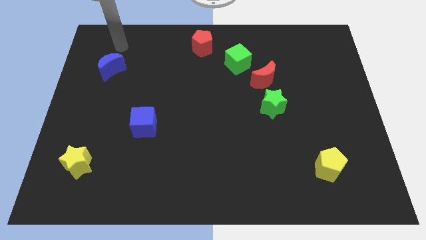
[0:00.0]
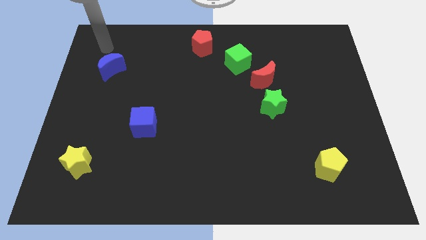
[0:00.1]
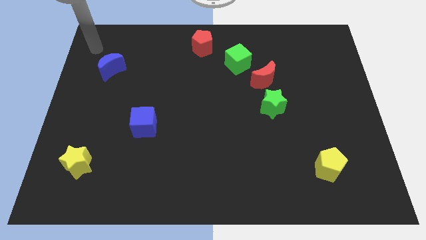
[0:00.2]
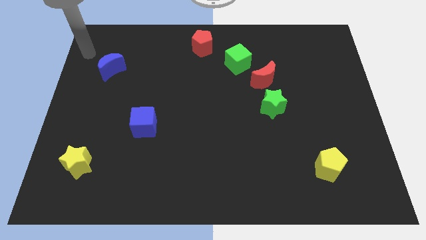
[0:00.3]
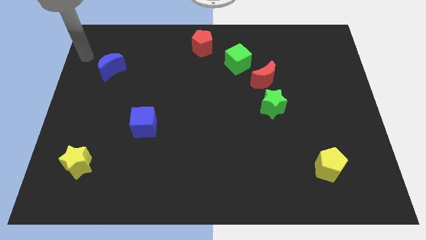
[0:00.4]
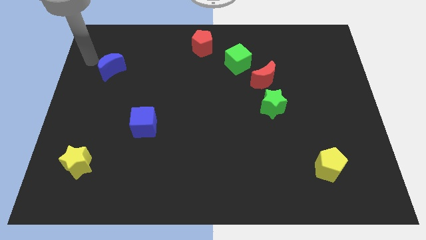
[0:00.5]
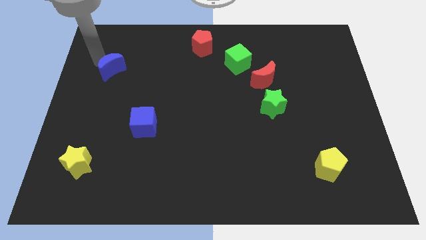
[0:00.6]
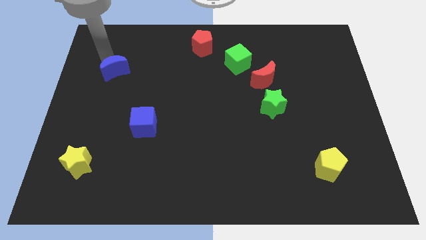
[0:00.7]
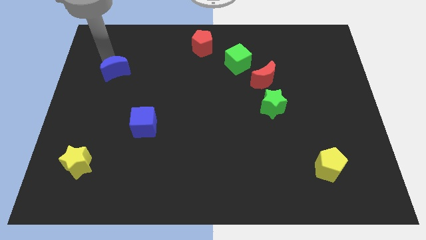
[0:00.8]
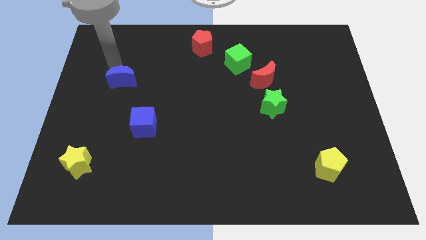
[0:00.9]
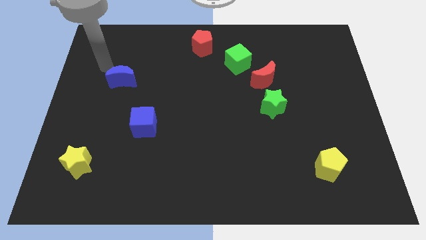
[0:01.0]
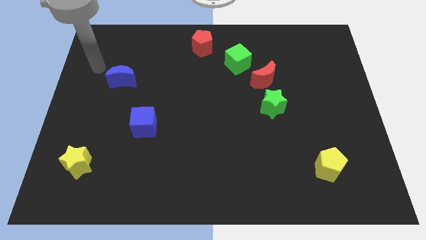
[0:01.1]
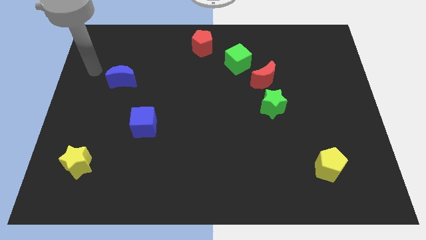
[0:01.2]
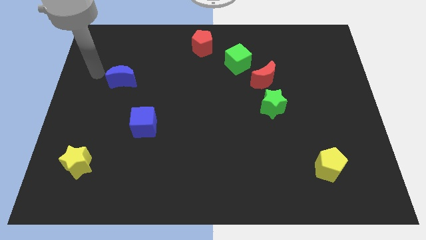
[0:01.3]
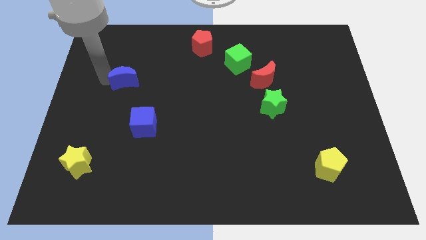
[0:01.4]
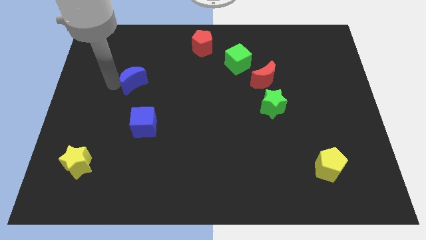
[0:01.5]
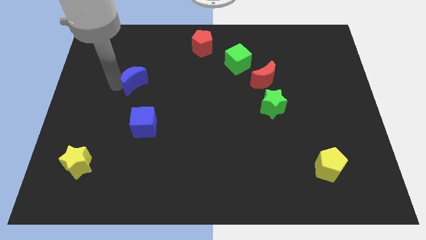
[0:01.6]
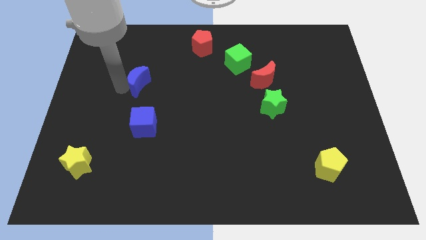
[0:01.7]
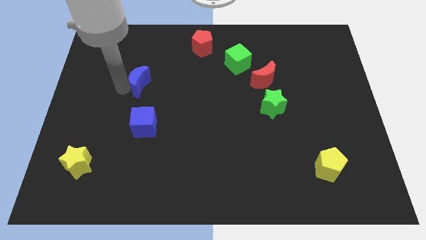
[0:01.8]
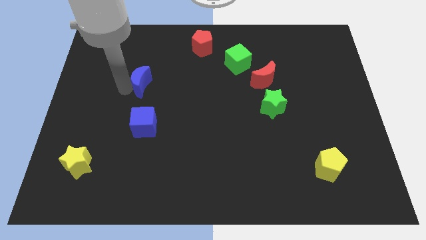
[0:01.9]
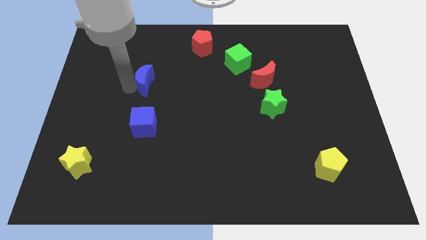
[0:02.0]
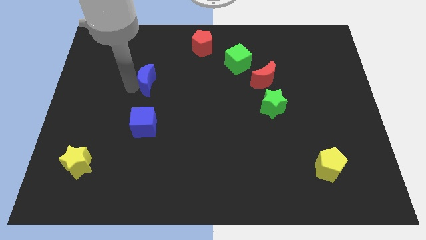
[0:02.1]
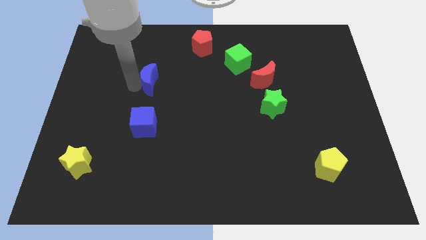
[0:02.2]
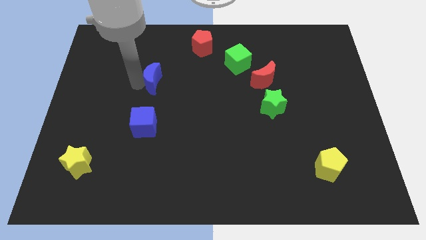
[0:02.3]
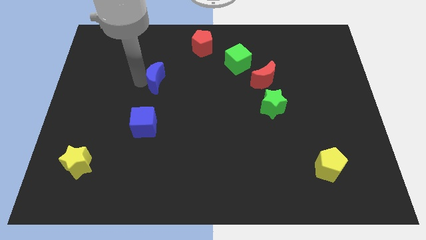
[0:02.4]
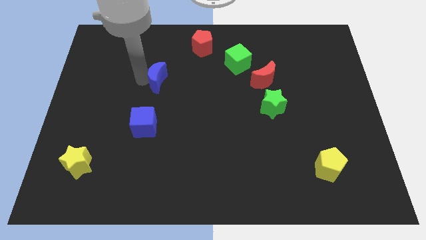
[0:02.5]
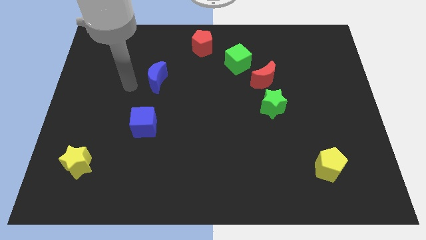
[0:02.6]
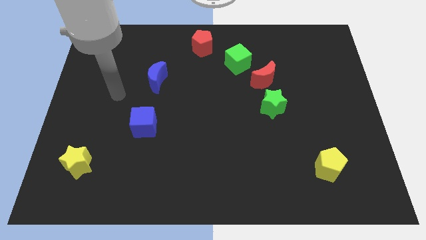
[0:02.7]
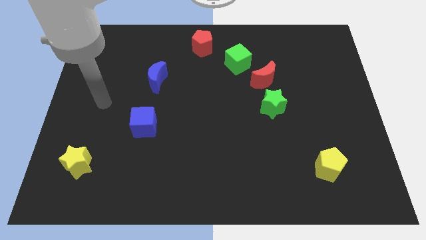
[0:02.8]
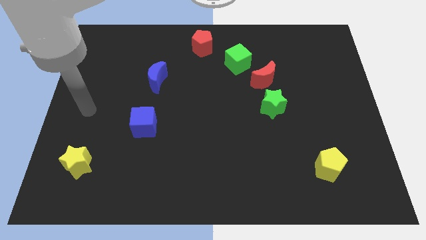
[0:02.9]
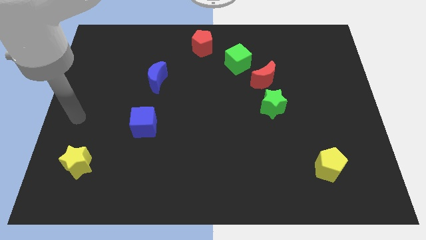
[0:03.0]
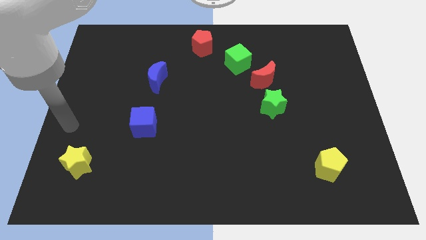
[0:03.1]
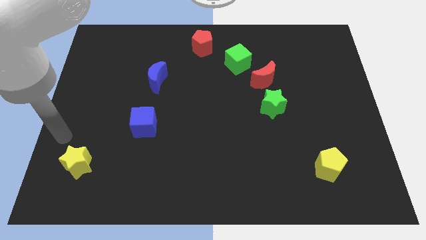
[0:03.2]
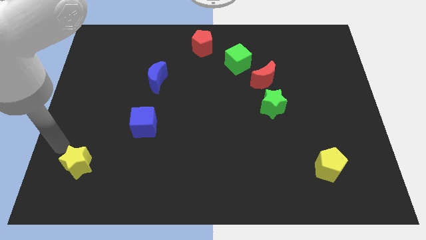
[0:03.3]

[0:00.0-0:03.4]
slide the blue moon vertically above the blue cube

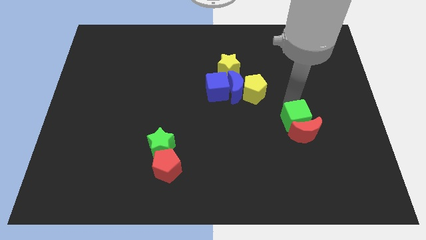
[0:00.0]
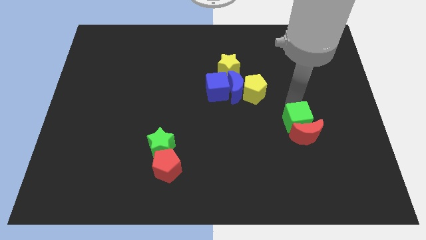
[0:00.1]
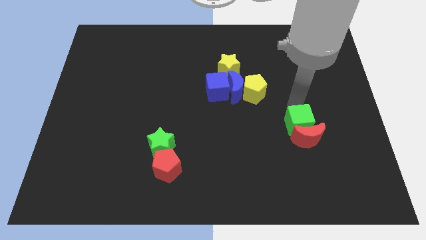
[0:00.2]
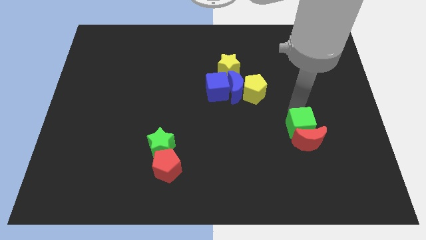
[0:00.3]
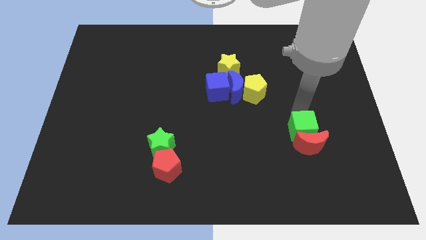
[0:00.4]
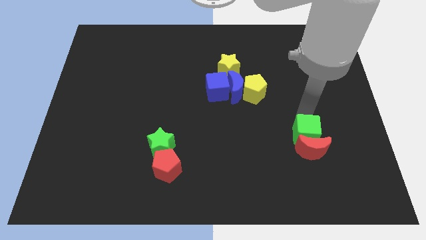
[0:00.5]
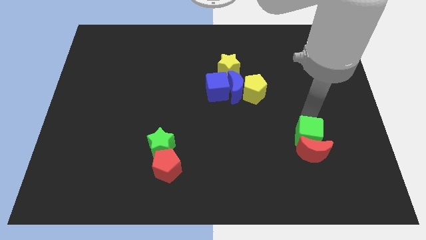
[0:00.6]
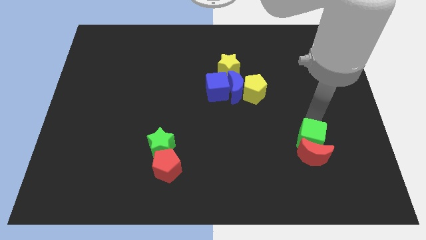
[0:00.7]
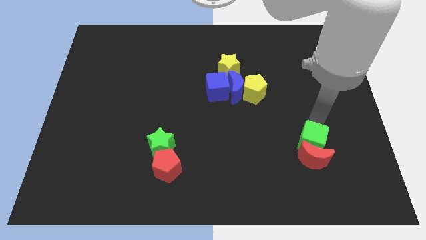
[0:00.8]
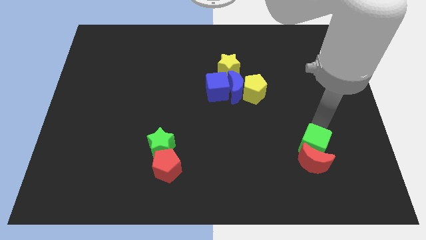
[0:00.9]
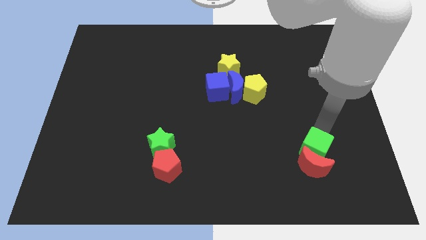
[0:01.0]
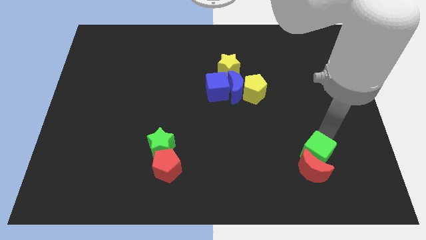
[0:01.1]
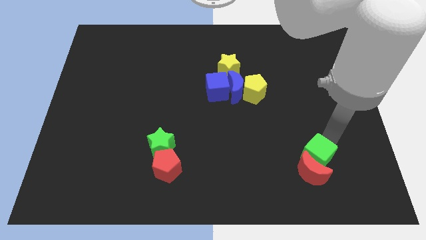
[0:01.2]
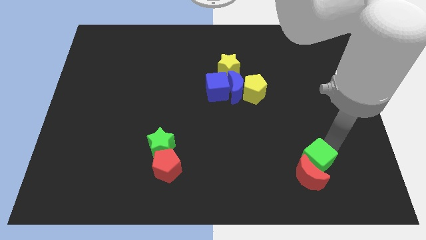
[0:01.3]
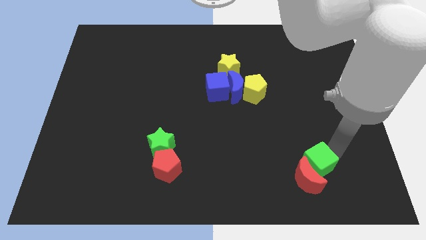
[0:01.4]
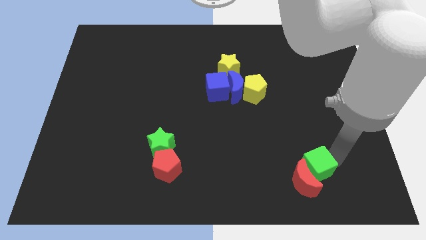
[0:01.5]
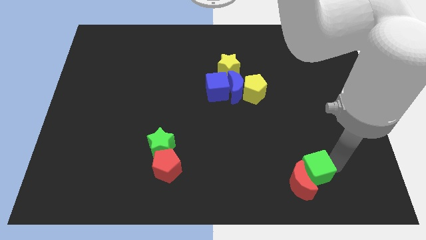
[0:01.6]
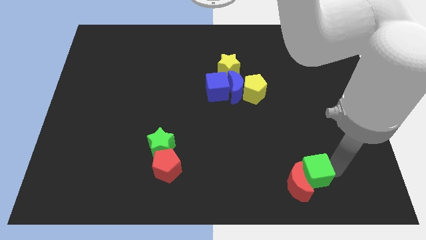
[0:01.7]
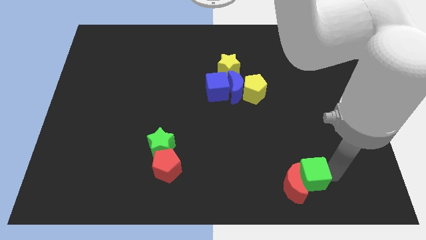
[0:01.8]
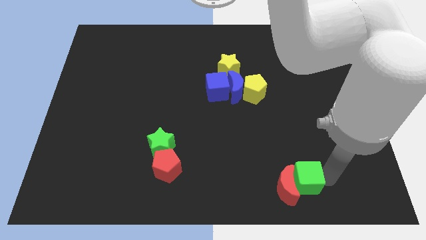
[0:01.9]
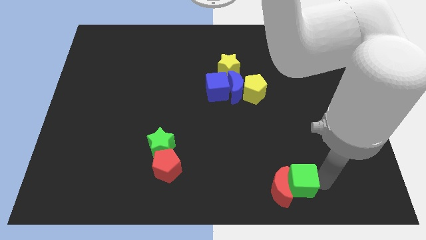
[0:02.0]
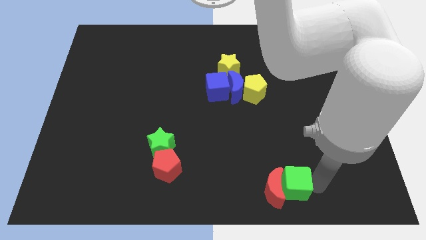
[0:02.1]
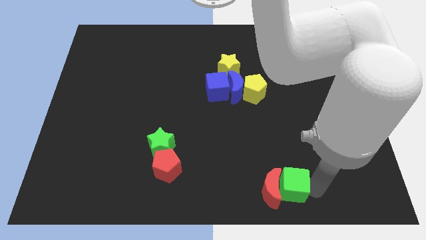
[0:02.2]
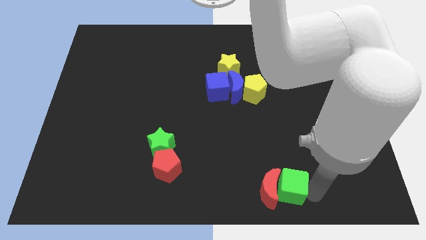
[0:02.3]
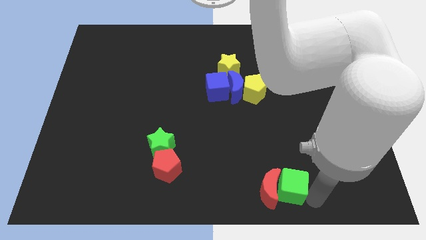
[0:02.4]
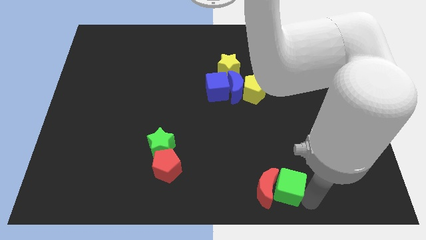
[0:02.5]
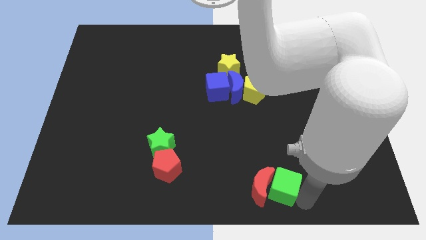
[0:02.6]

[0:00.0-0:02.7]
push the red moon with a green cube to the bottom of the board

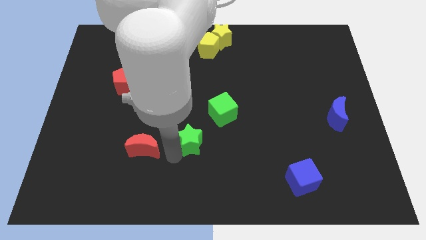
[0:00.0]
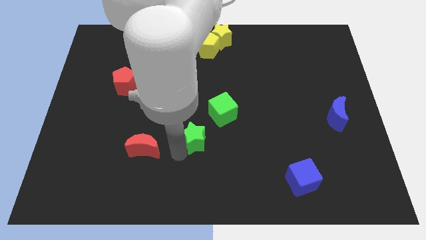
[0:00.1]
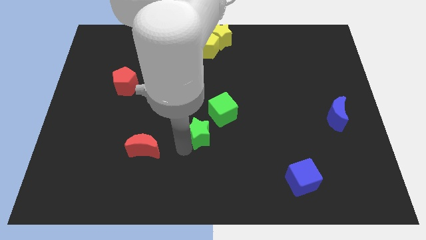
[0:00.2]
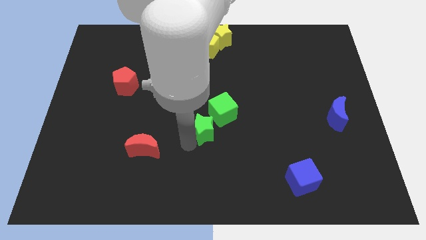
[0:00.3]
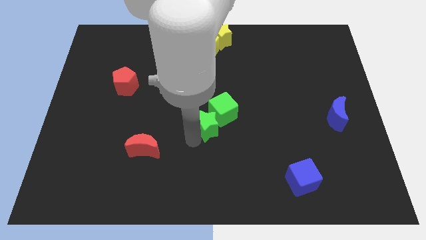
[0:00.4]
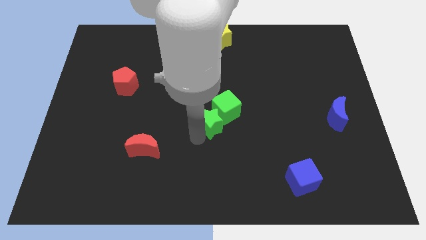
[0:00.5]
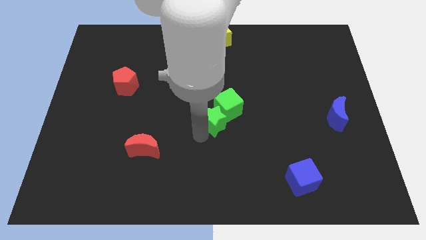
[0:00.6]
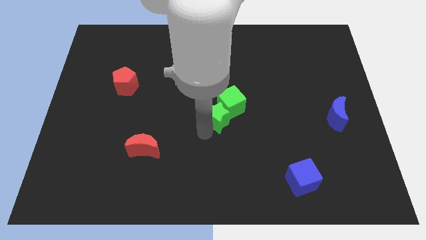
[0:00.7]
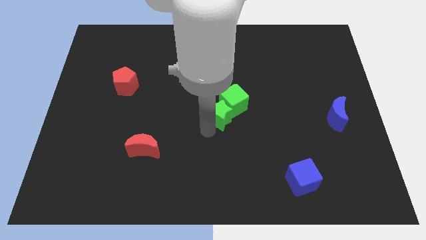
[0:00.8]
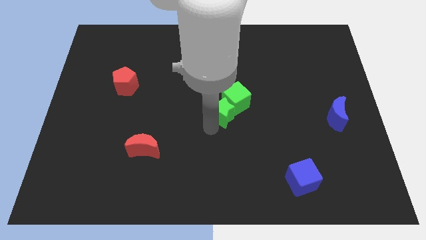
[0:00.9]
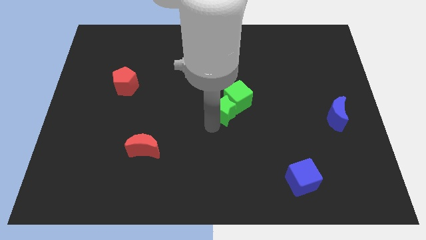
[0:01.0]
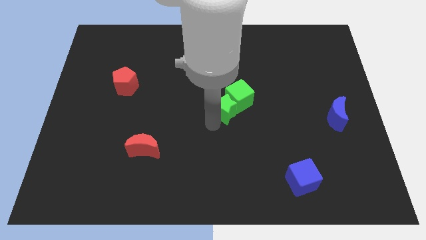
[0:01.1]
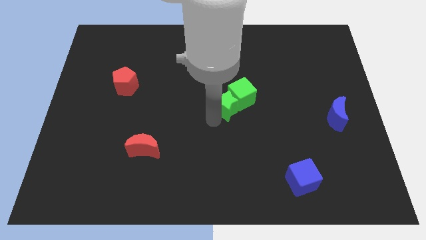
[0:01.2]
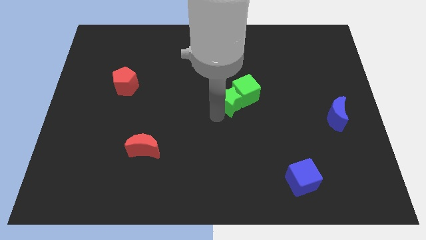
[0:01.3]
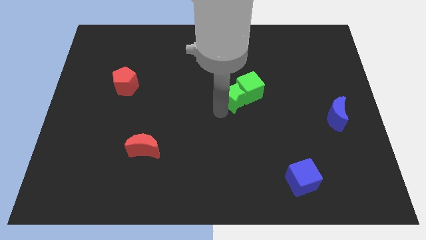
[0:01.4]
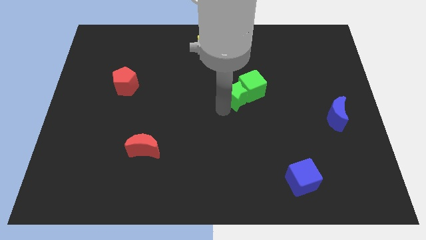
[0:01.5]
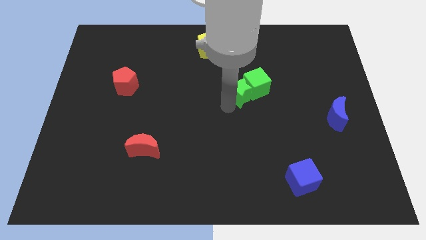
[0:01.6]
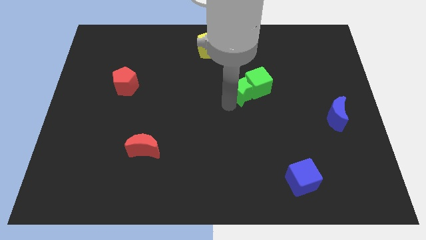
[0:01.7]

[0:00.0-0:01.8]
push the green star into the green cube

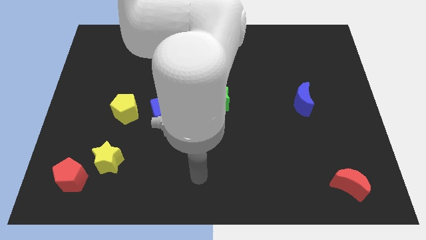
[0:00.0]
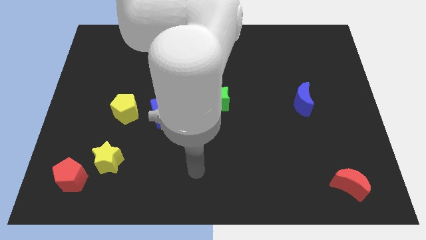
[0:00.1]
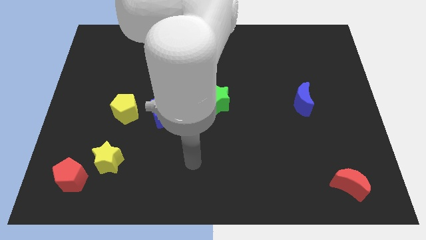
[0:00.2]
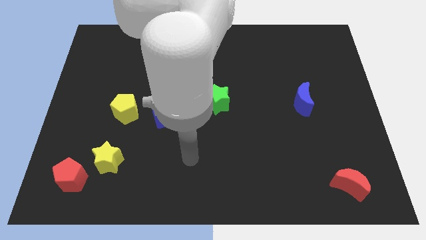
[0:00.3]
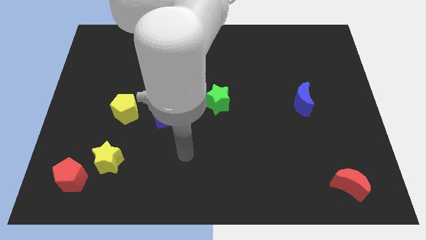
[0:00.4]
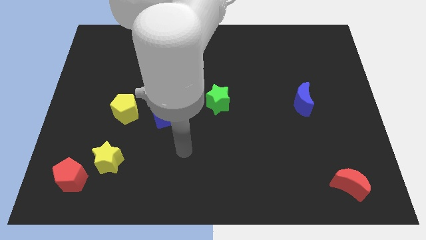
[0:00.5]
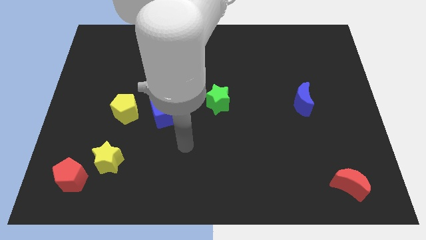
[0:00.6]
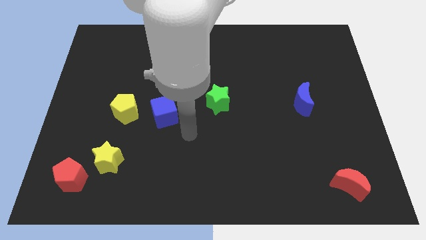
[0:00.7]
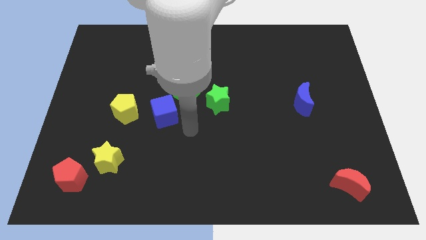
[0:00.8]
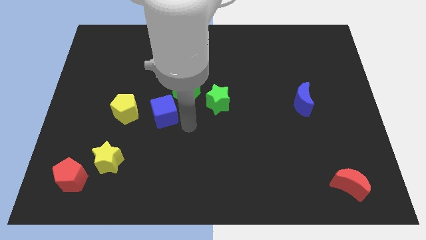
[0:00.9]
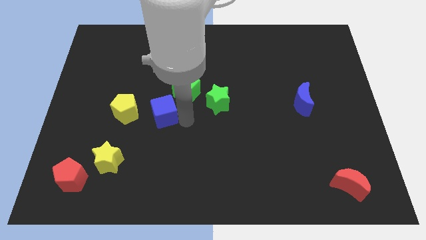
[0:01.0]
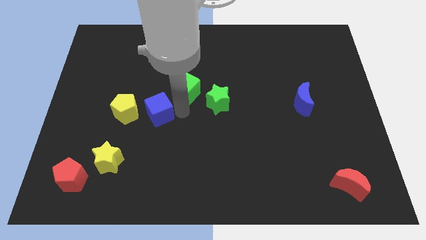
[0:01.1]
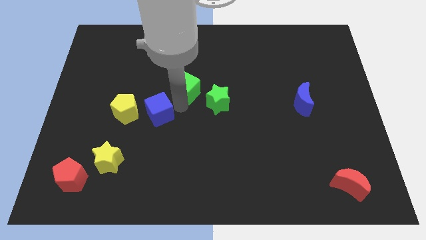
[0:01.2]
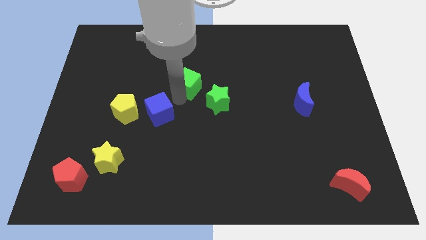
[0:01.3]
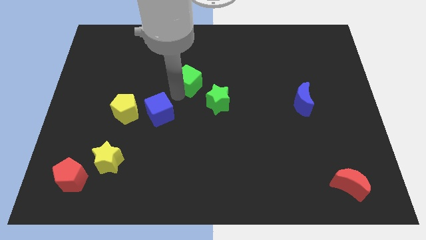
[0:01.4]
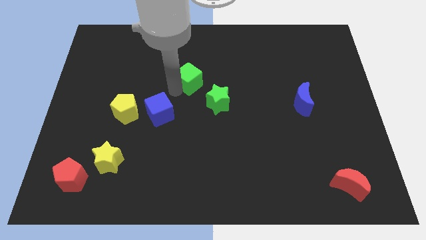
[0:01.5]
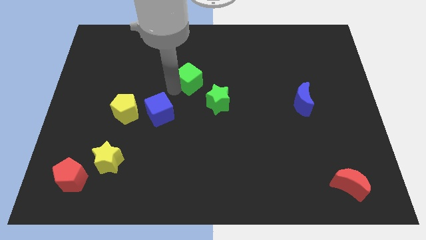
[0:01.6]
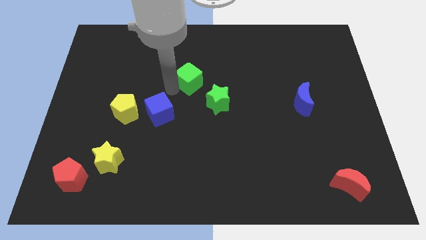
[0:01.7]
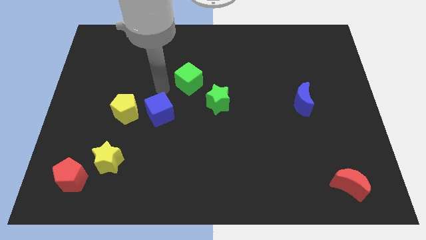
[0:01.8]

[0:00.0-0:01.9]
separate the blue and green cube
